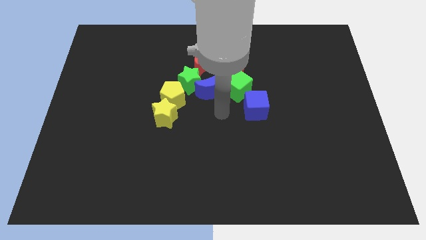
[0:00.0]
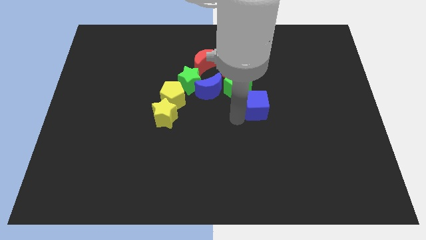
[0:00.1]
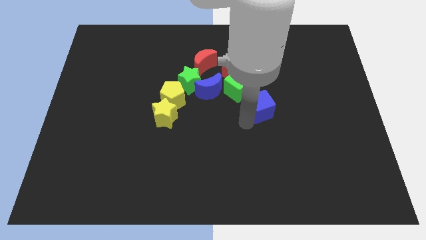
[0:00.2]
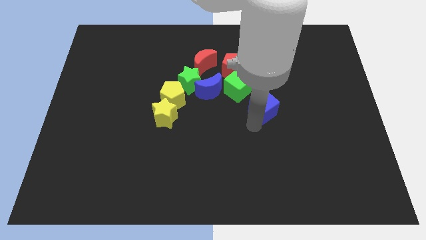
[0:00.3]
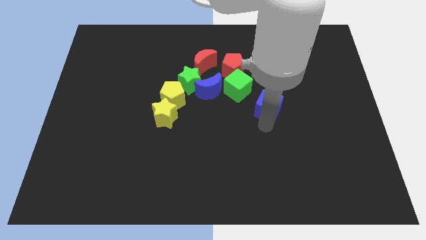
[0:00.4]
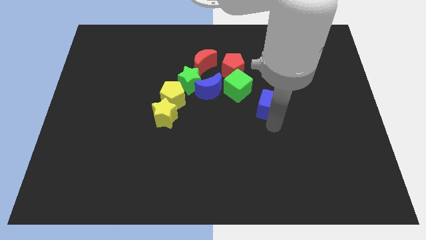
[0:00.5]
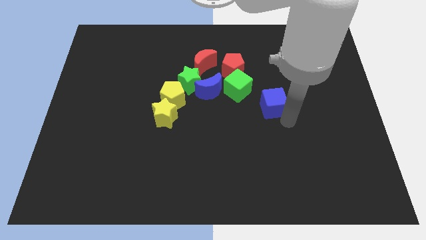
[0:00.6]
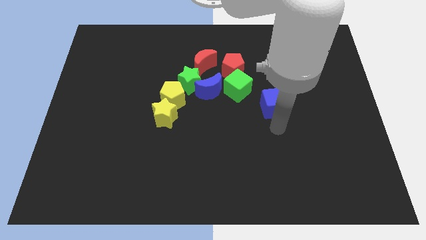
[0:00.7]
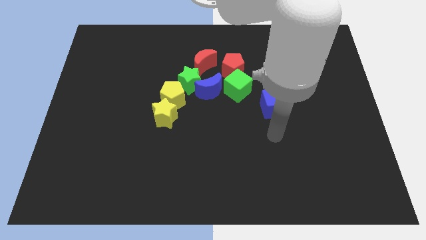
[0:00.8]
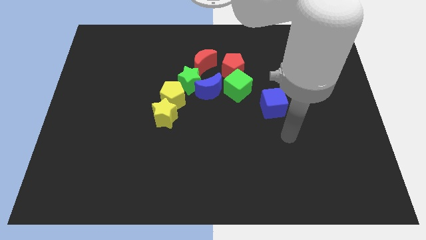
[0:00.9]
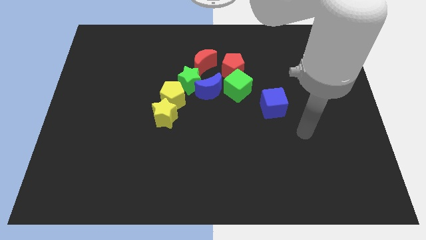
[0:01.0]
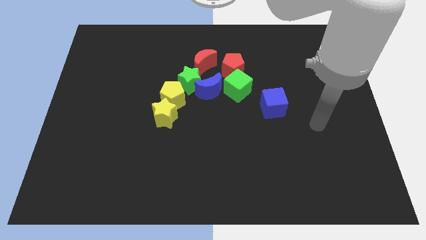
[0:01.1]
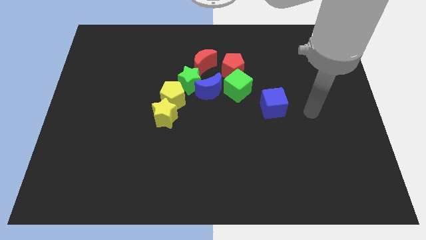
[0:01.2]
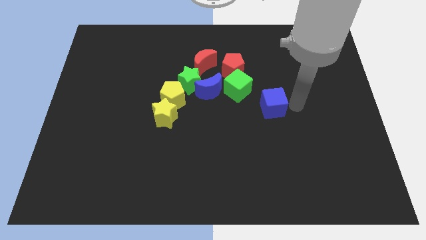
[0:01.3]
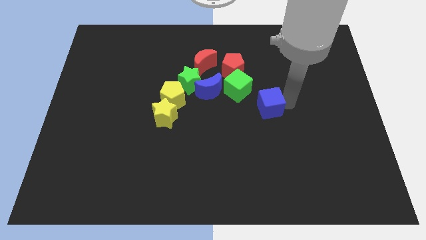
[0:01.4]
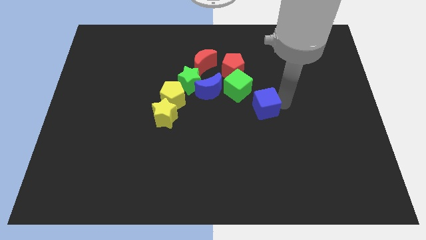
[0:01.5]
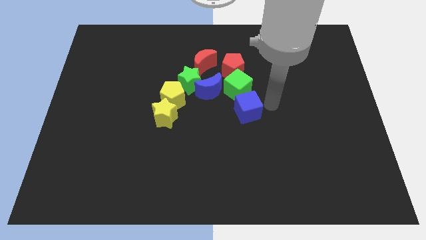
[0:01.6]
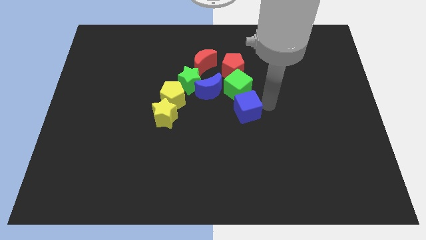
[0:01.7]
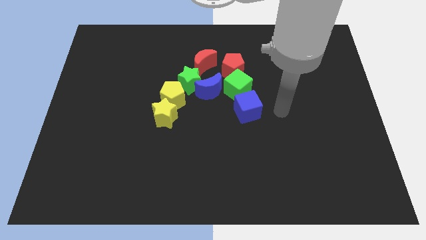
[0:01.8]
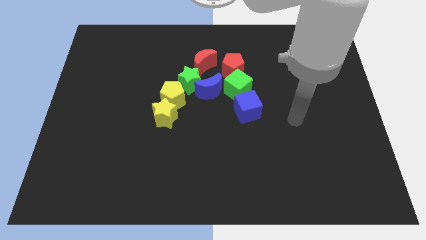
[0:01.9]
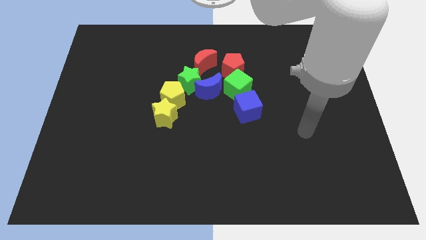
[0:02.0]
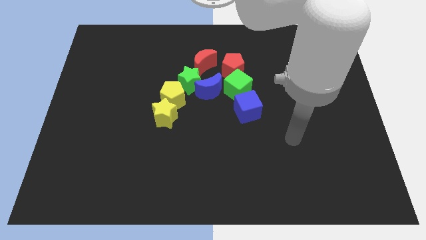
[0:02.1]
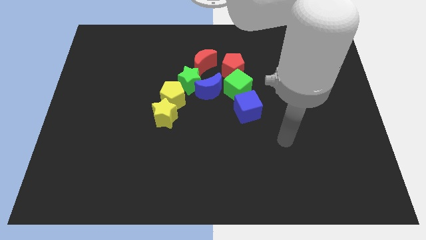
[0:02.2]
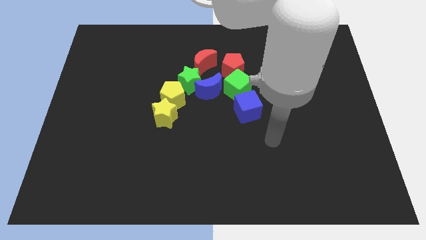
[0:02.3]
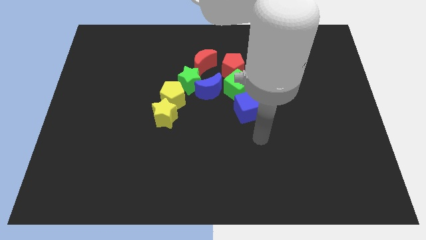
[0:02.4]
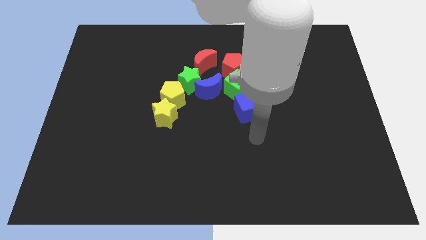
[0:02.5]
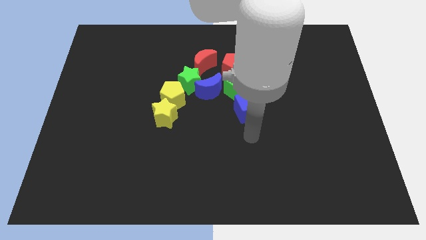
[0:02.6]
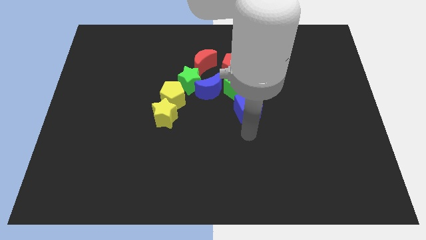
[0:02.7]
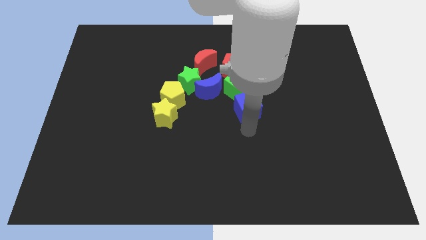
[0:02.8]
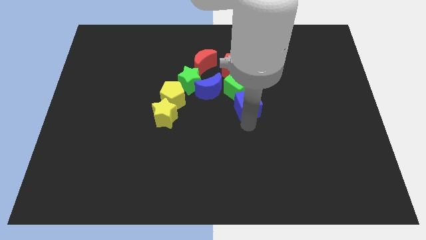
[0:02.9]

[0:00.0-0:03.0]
move the blue cube to the bottom of the green cube

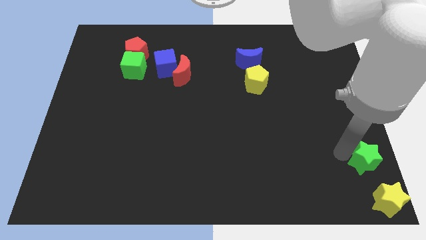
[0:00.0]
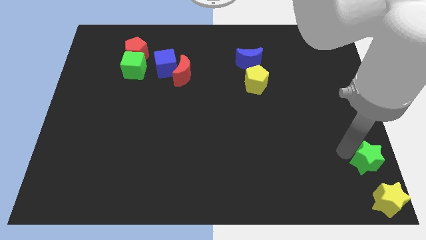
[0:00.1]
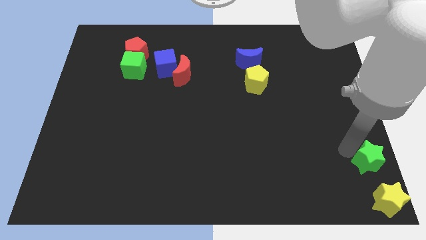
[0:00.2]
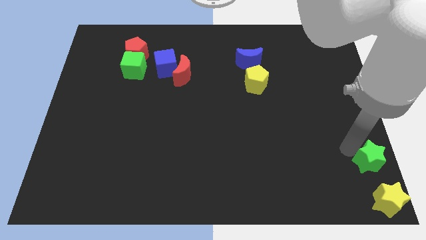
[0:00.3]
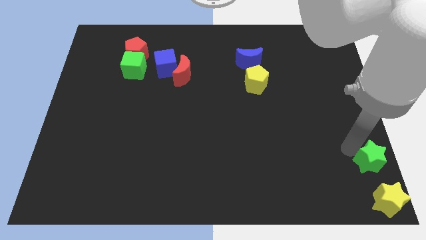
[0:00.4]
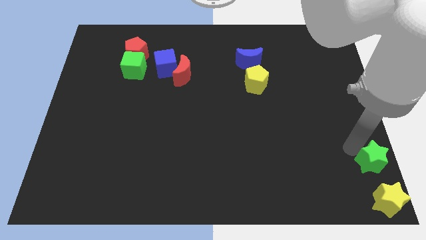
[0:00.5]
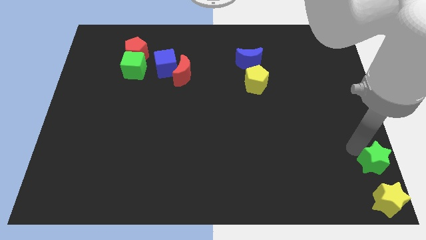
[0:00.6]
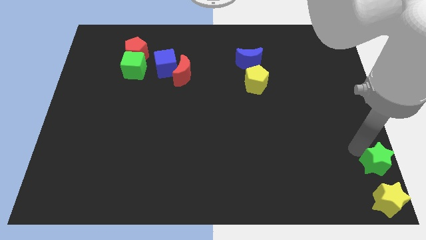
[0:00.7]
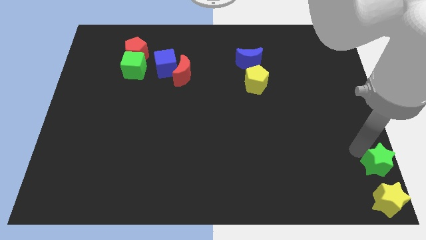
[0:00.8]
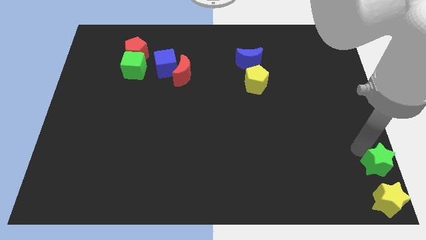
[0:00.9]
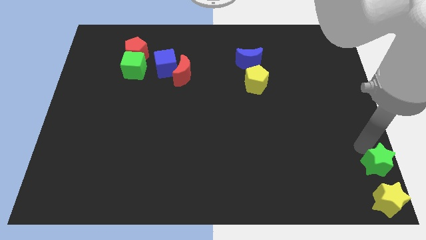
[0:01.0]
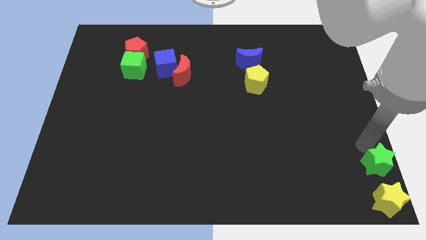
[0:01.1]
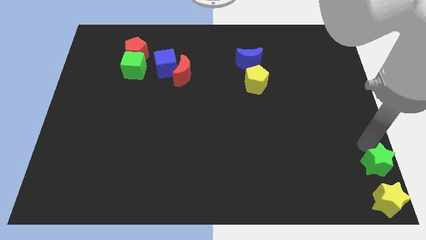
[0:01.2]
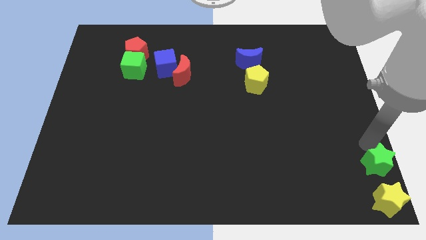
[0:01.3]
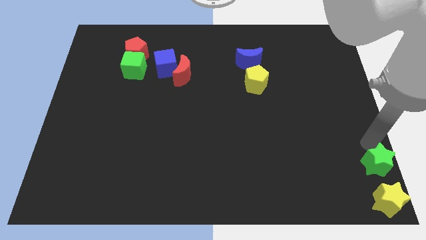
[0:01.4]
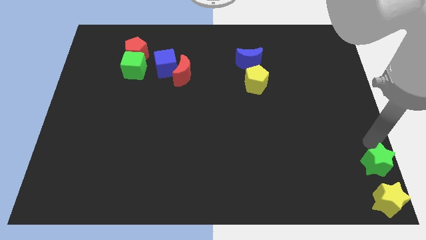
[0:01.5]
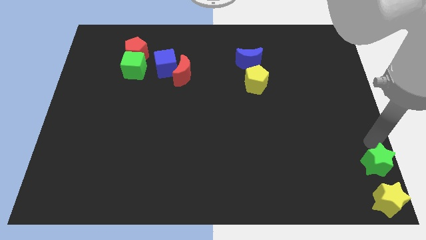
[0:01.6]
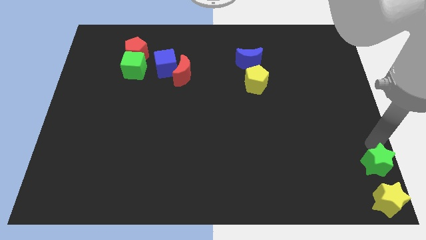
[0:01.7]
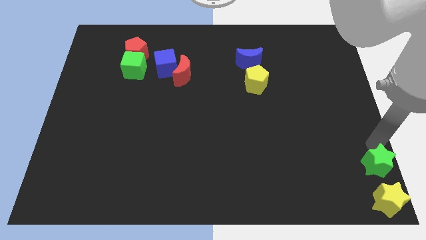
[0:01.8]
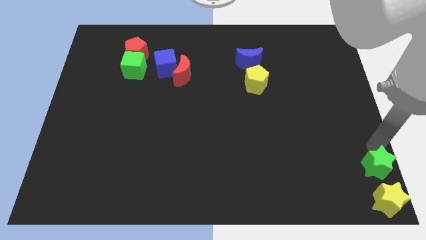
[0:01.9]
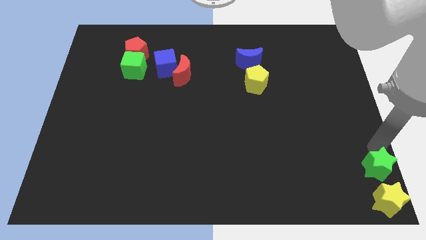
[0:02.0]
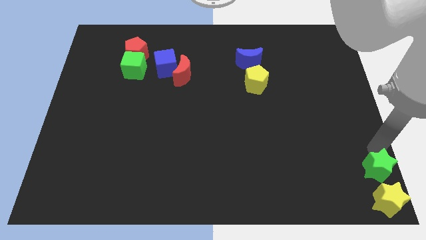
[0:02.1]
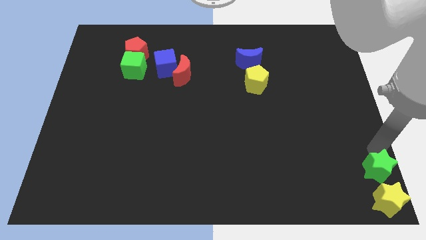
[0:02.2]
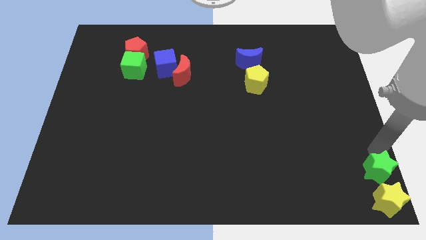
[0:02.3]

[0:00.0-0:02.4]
push the green star to the top of the yellow star

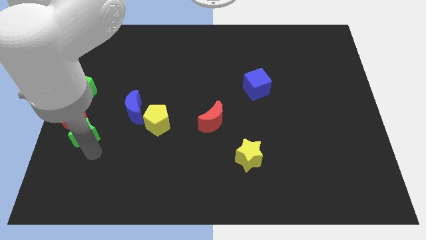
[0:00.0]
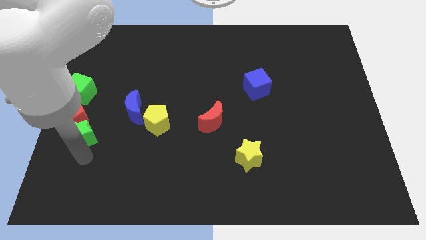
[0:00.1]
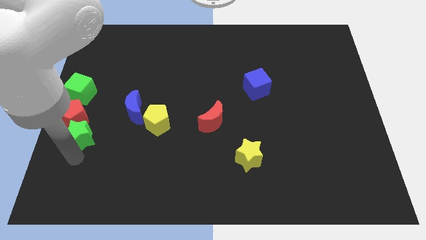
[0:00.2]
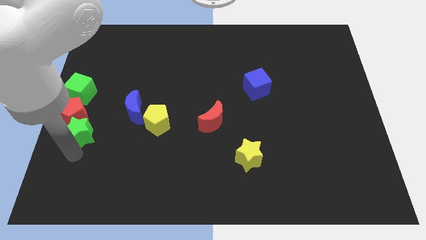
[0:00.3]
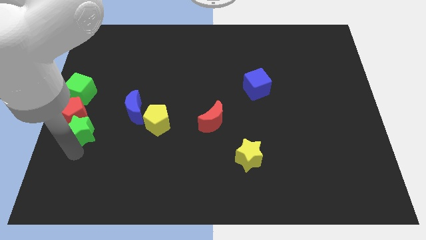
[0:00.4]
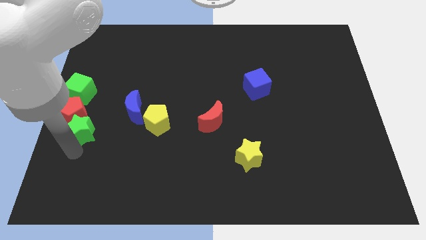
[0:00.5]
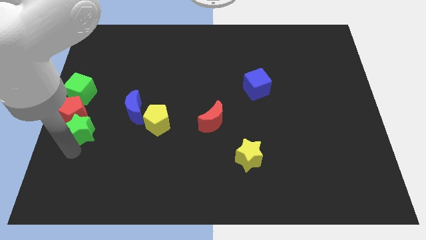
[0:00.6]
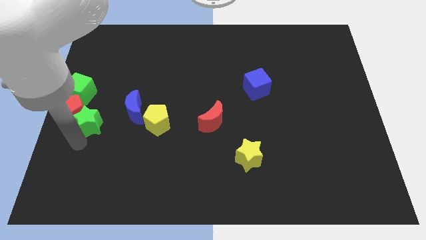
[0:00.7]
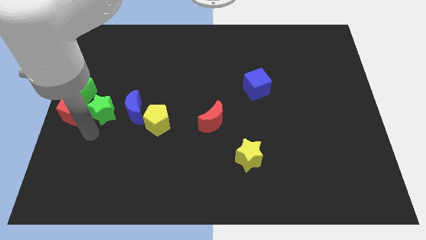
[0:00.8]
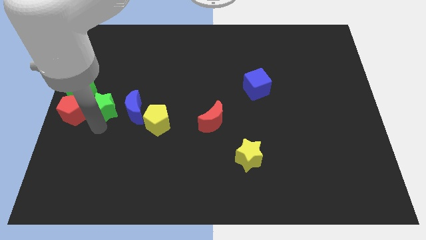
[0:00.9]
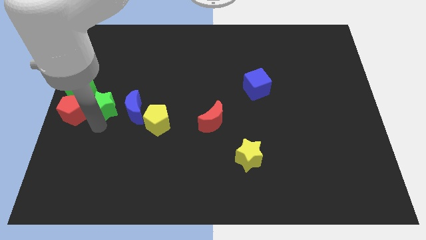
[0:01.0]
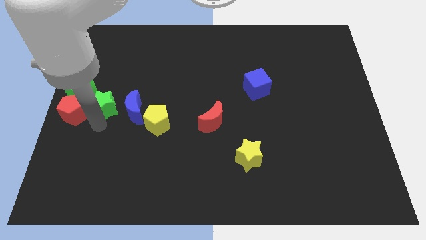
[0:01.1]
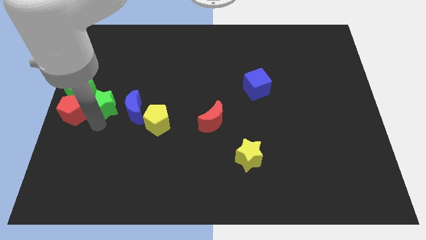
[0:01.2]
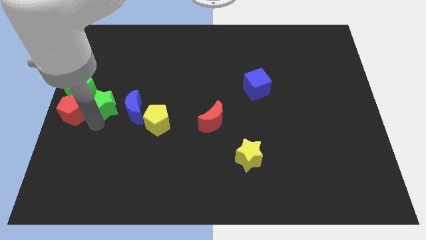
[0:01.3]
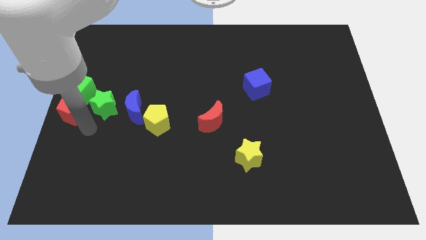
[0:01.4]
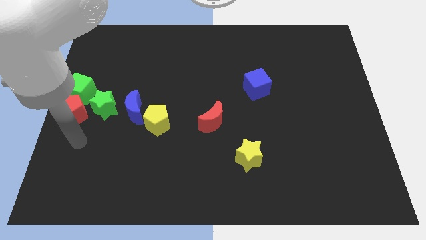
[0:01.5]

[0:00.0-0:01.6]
push the green star left to the blue crescent

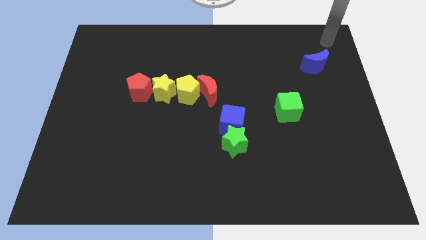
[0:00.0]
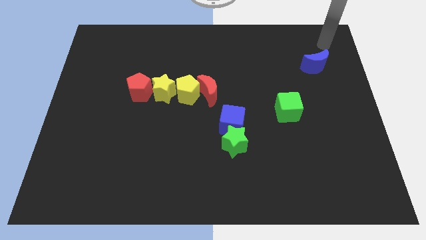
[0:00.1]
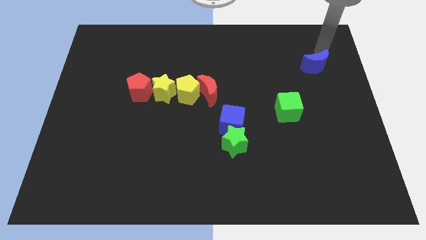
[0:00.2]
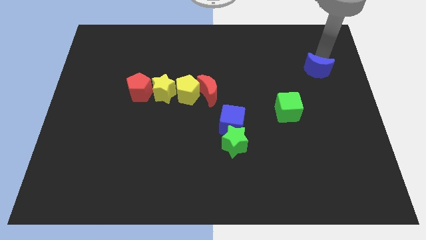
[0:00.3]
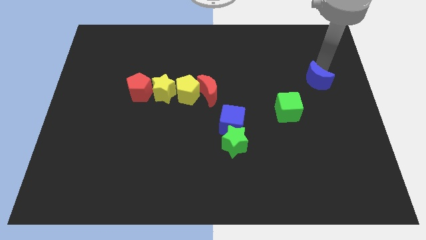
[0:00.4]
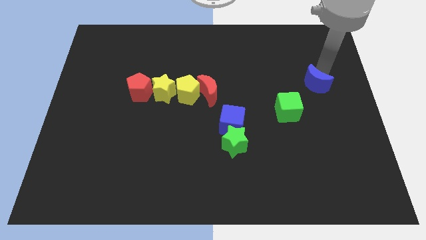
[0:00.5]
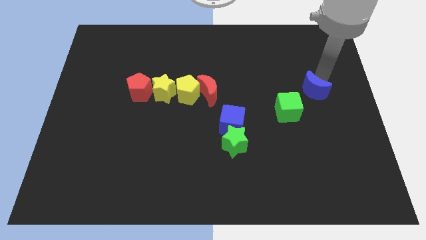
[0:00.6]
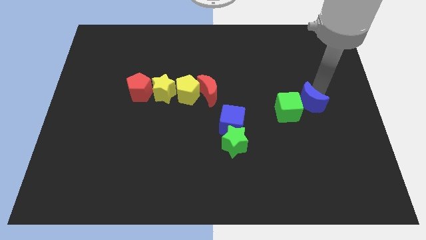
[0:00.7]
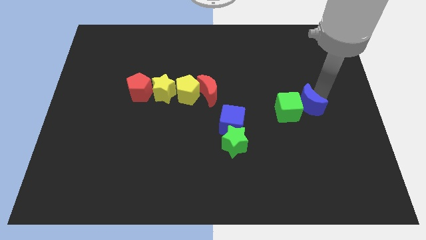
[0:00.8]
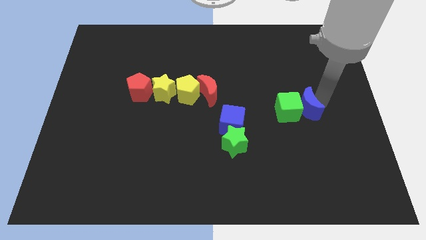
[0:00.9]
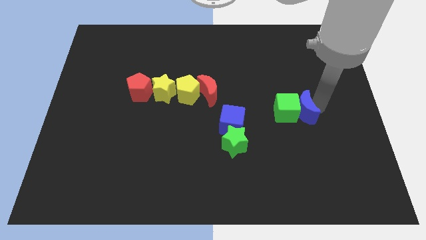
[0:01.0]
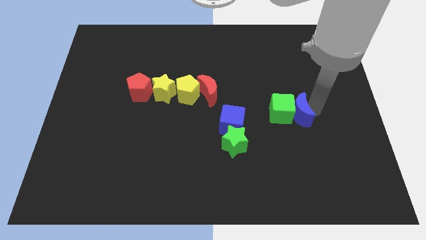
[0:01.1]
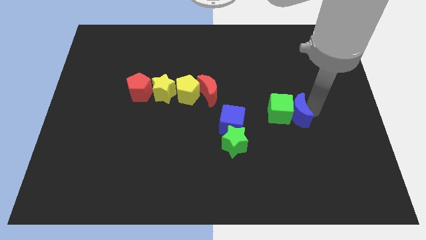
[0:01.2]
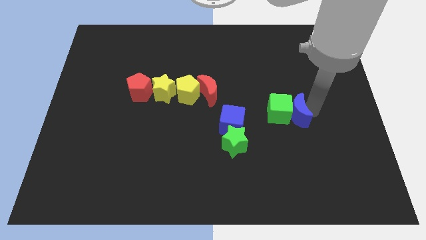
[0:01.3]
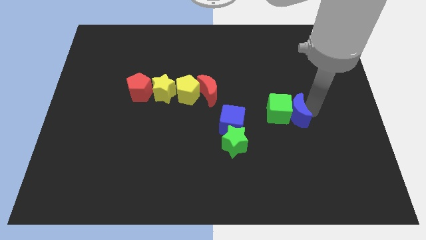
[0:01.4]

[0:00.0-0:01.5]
move the blue crescent to the right side of the green cube

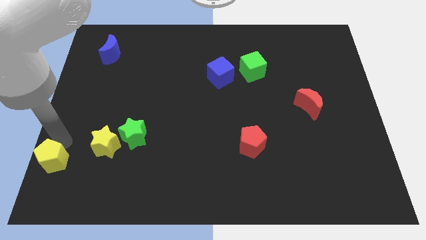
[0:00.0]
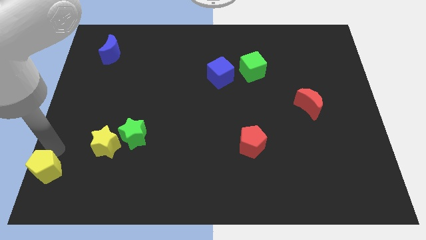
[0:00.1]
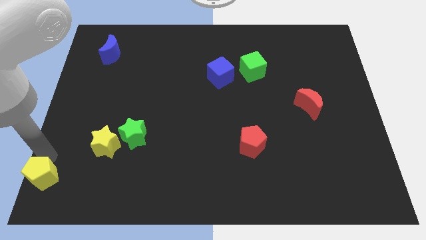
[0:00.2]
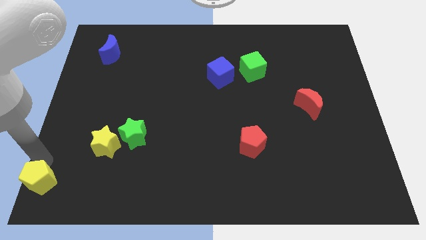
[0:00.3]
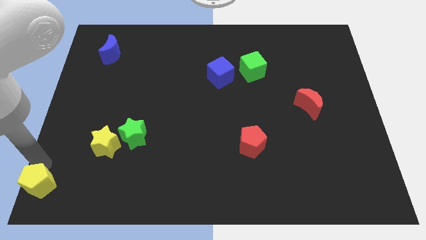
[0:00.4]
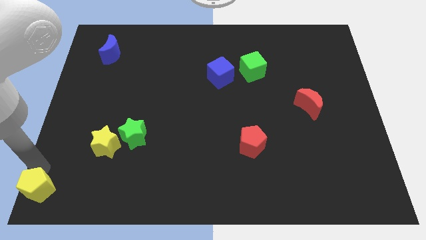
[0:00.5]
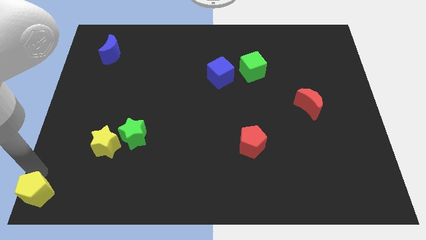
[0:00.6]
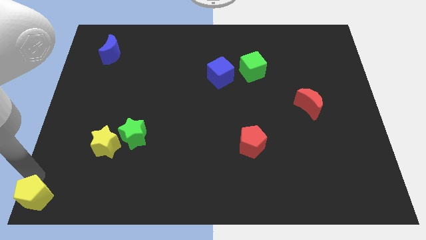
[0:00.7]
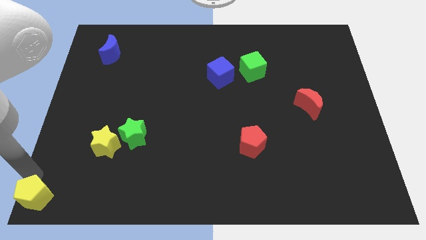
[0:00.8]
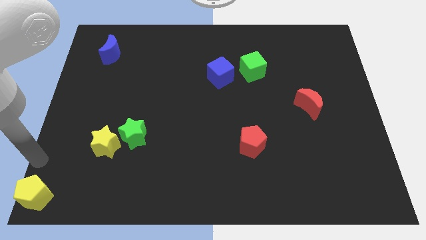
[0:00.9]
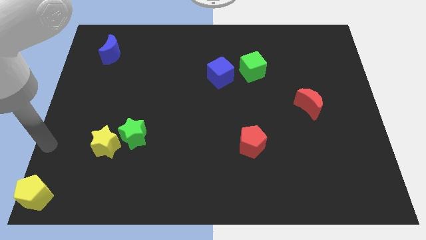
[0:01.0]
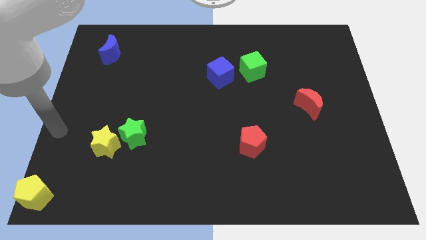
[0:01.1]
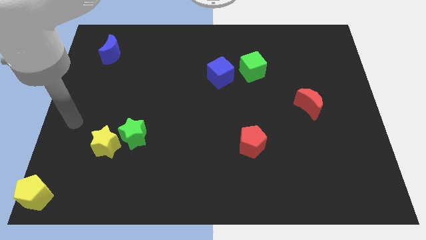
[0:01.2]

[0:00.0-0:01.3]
move the yellow pentagon to the bottom left corner
